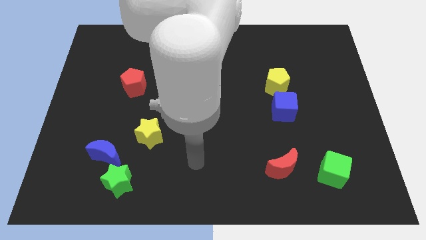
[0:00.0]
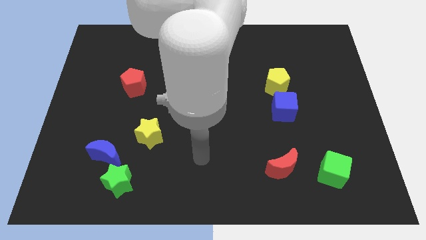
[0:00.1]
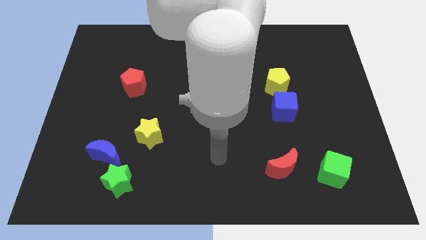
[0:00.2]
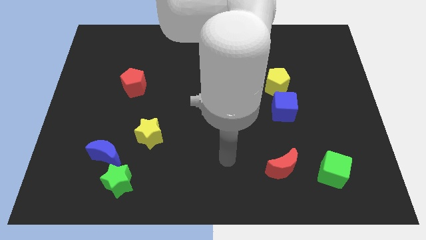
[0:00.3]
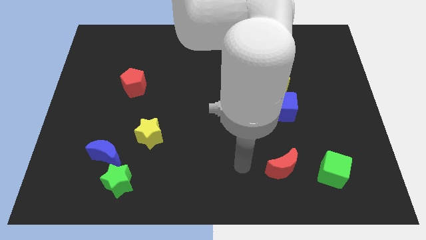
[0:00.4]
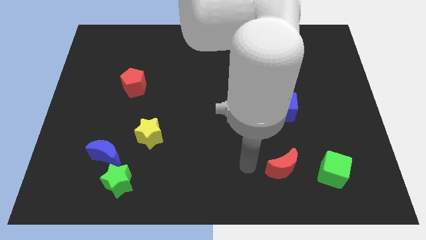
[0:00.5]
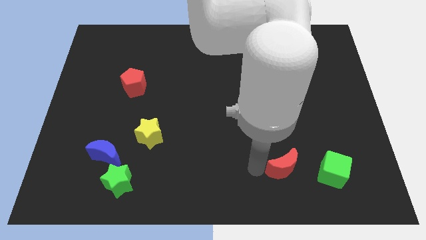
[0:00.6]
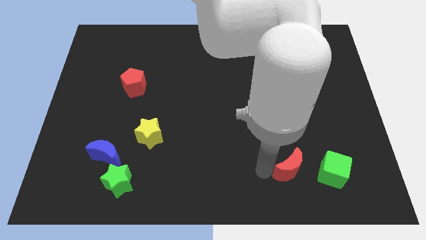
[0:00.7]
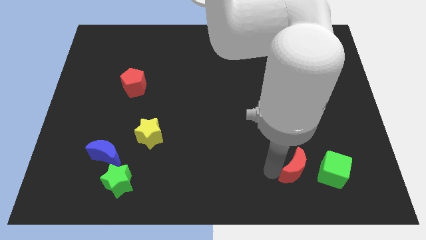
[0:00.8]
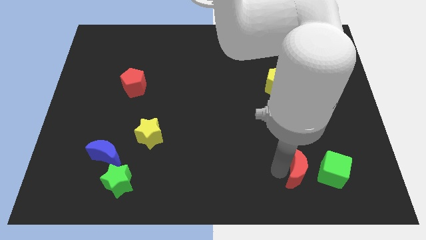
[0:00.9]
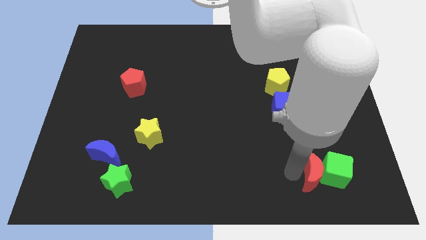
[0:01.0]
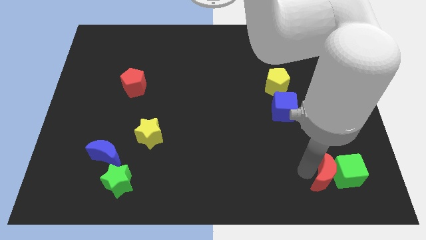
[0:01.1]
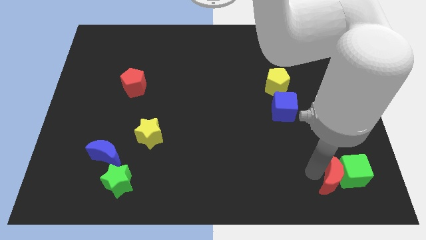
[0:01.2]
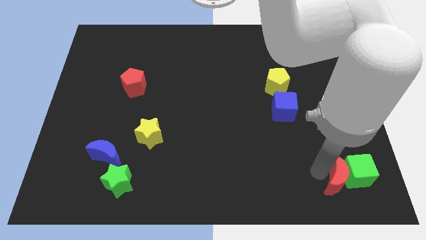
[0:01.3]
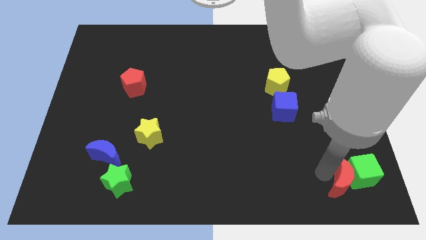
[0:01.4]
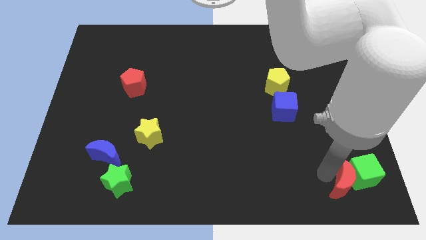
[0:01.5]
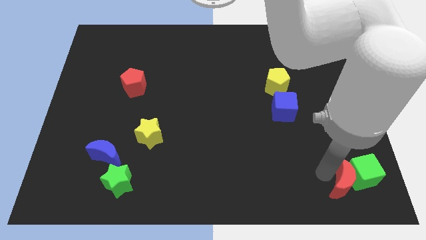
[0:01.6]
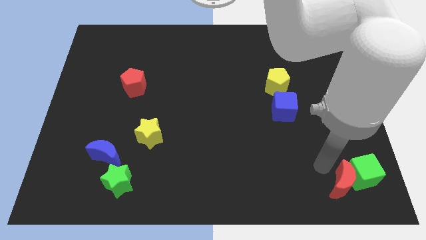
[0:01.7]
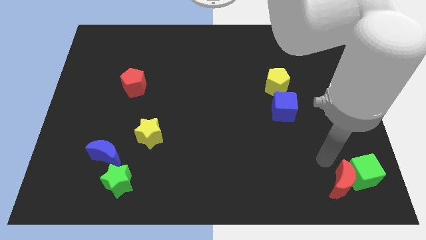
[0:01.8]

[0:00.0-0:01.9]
move the red moon into the green cube

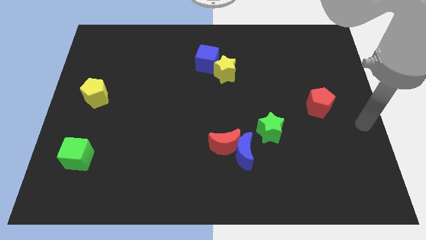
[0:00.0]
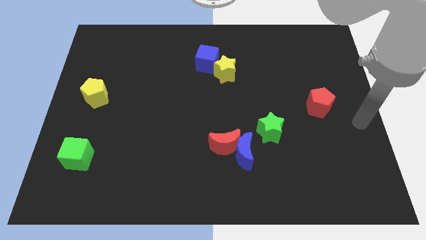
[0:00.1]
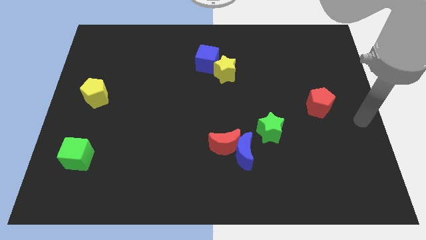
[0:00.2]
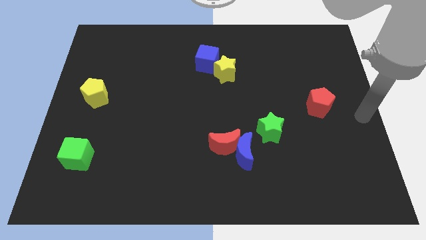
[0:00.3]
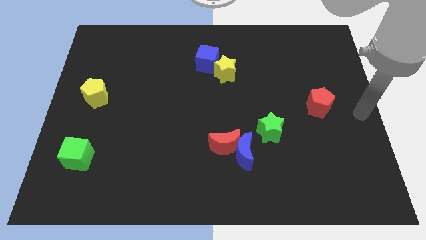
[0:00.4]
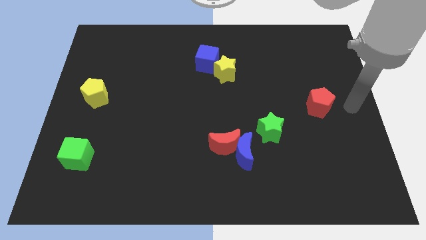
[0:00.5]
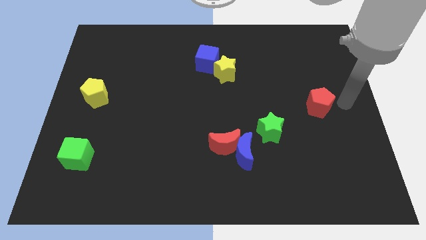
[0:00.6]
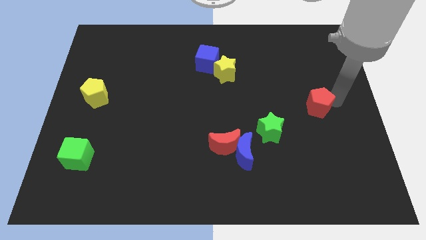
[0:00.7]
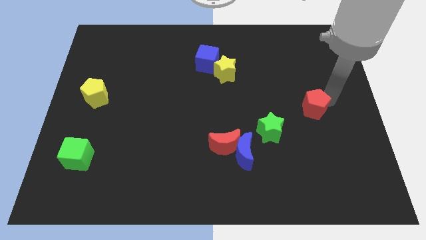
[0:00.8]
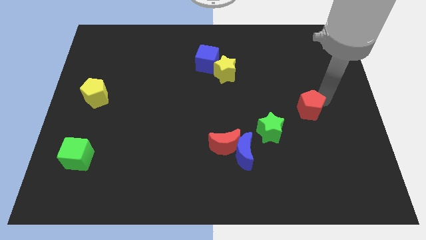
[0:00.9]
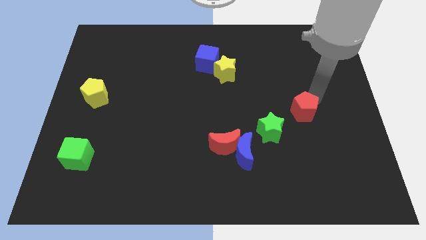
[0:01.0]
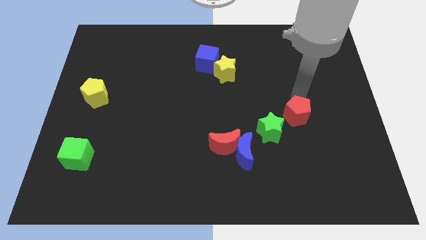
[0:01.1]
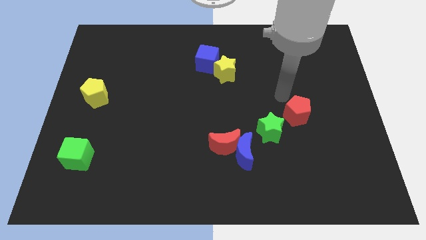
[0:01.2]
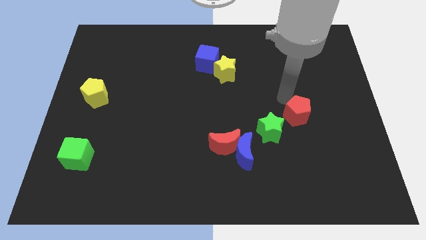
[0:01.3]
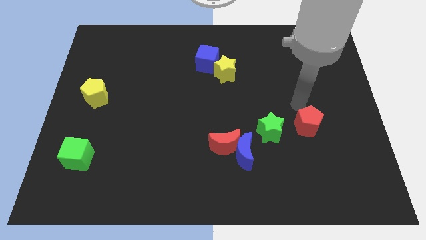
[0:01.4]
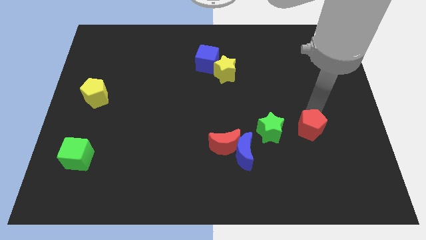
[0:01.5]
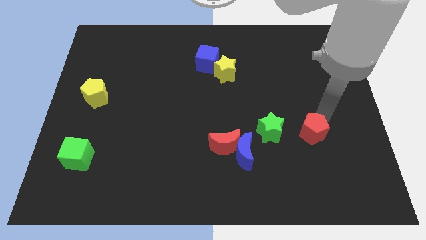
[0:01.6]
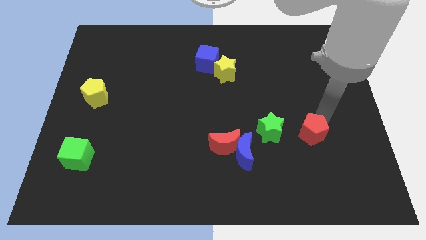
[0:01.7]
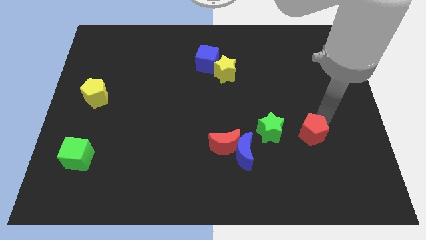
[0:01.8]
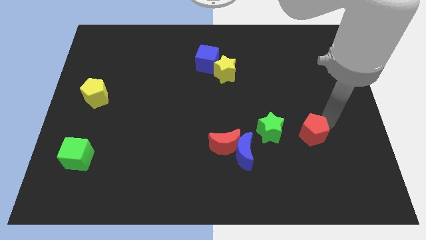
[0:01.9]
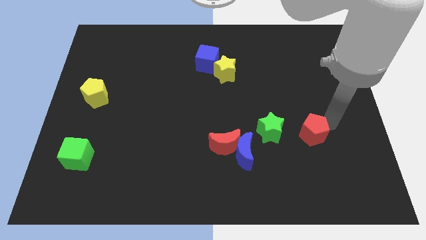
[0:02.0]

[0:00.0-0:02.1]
move red pentagon to the right of green star

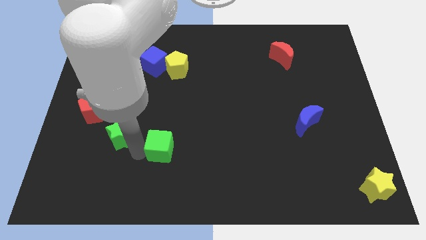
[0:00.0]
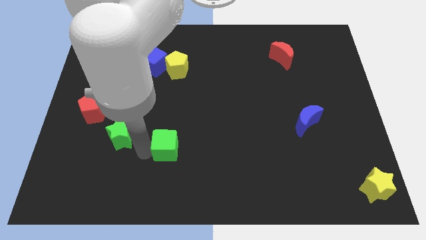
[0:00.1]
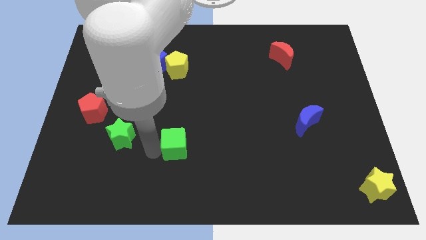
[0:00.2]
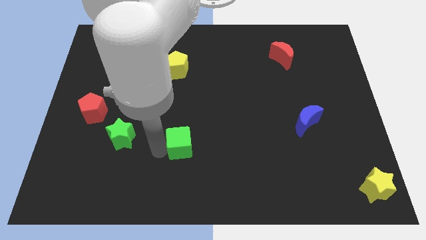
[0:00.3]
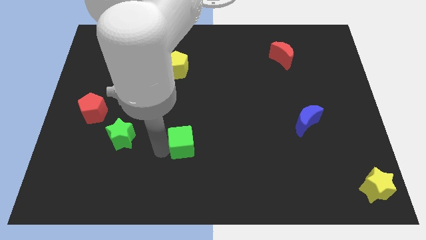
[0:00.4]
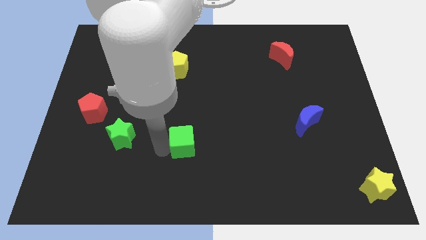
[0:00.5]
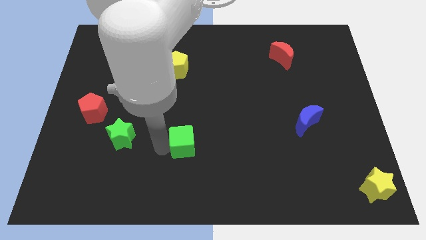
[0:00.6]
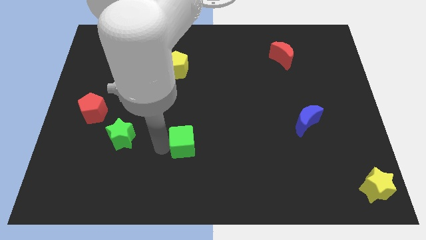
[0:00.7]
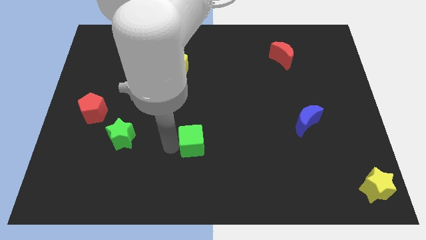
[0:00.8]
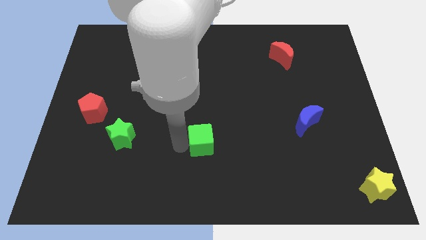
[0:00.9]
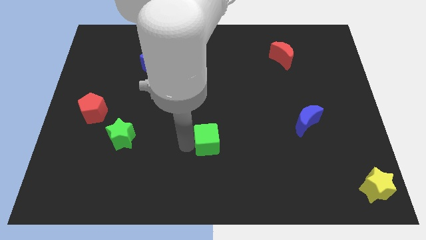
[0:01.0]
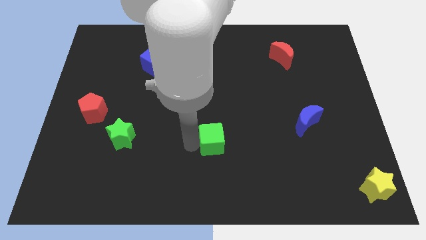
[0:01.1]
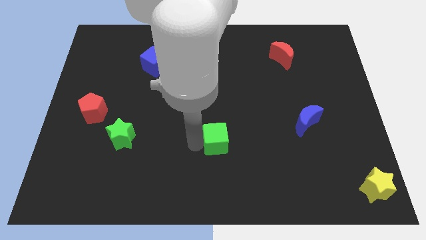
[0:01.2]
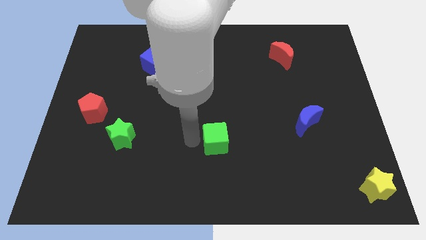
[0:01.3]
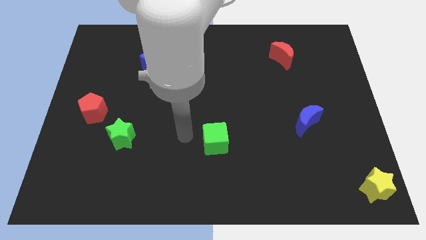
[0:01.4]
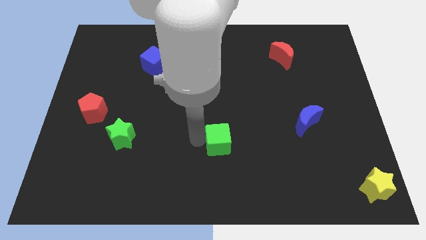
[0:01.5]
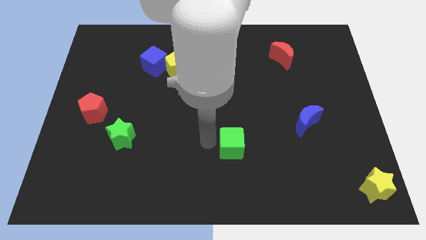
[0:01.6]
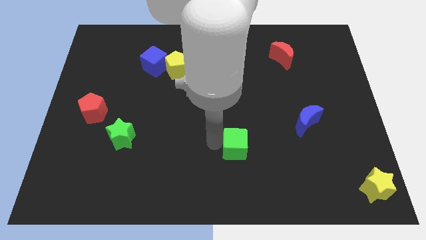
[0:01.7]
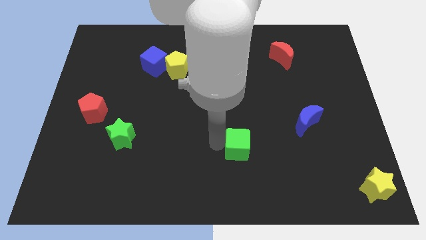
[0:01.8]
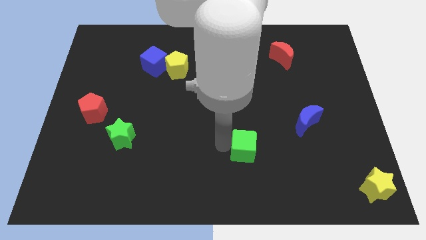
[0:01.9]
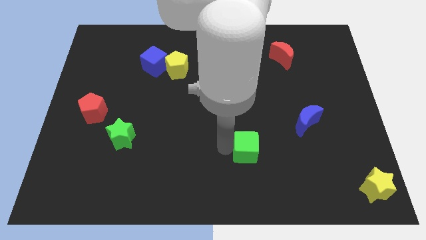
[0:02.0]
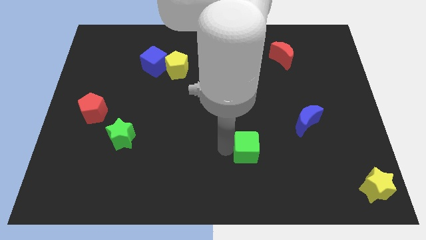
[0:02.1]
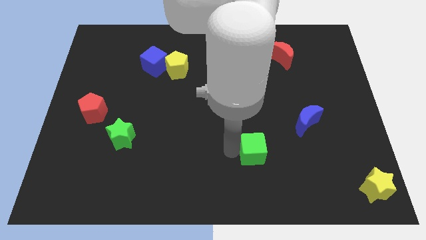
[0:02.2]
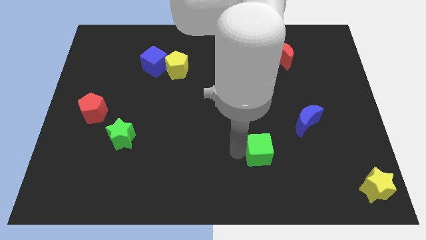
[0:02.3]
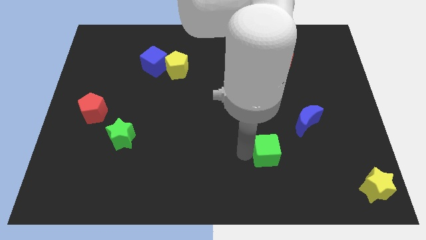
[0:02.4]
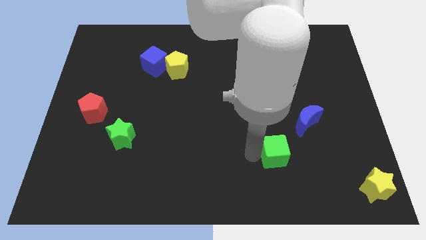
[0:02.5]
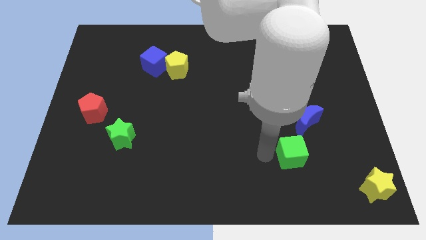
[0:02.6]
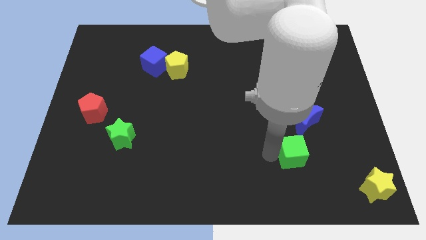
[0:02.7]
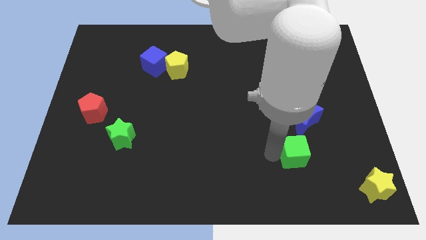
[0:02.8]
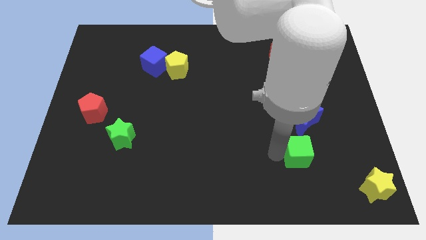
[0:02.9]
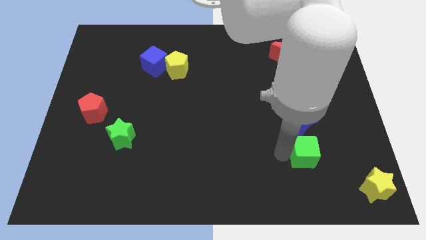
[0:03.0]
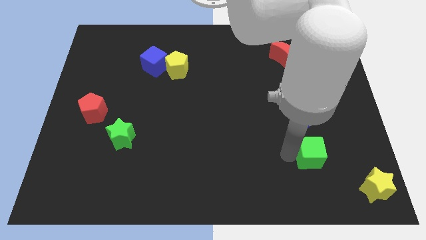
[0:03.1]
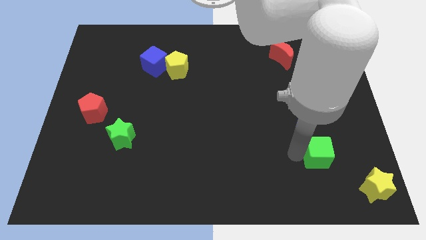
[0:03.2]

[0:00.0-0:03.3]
push the green cube to the right

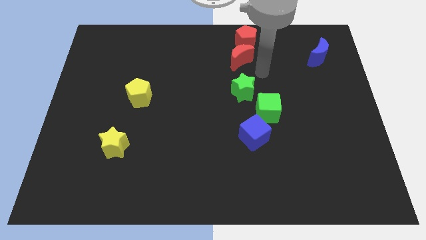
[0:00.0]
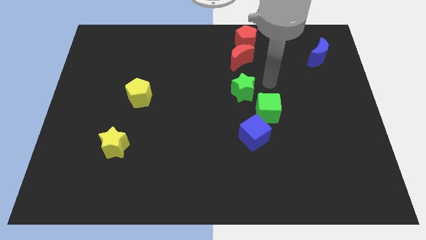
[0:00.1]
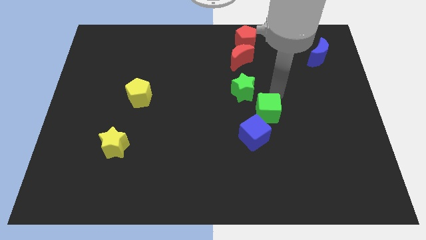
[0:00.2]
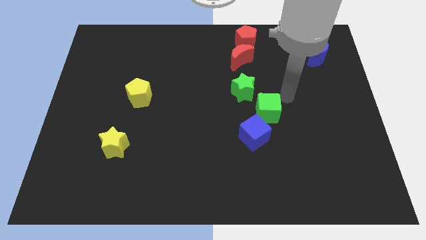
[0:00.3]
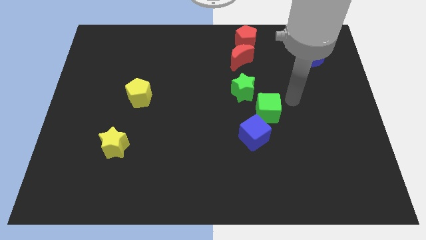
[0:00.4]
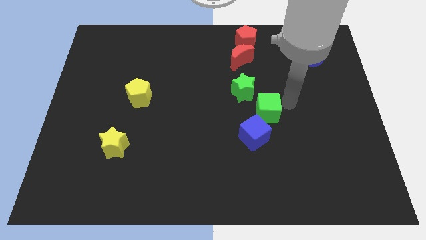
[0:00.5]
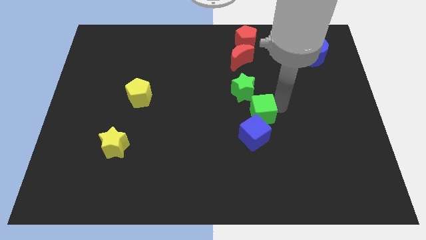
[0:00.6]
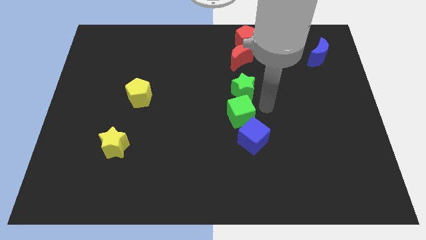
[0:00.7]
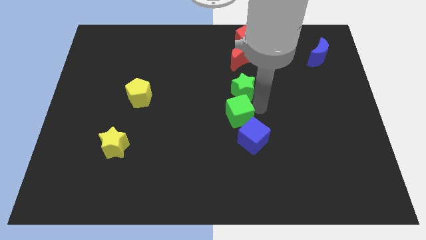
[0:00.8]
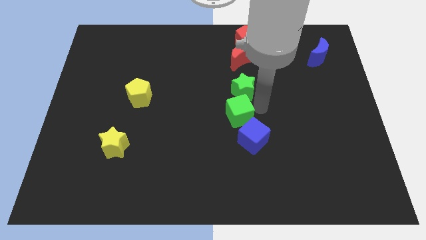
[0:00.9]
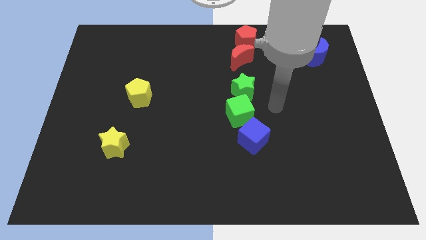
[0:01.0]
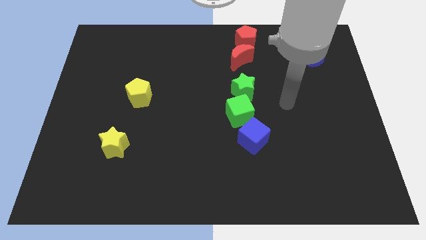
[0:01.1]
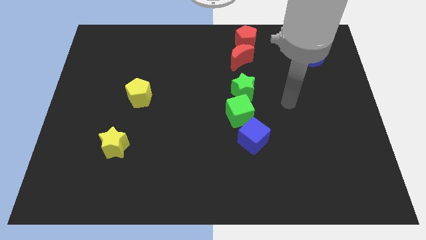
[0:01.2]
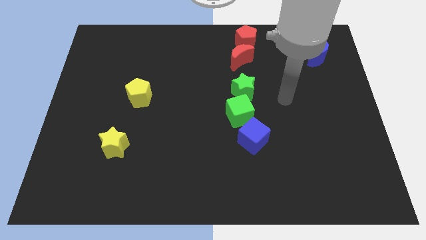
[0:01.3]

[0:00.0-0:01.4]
push the green cube between green star and blue block

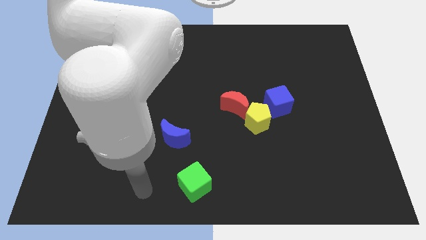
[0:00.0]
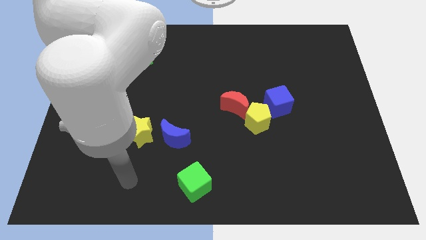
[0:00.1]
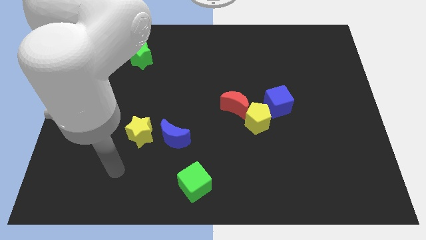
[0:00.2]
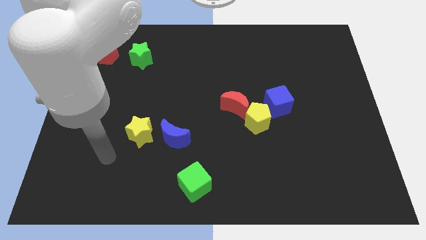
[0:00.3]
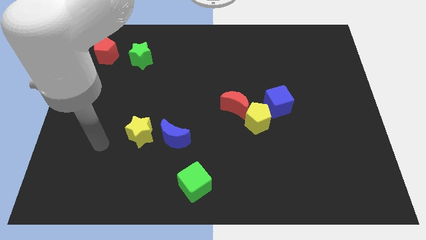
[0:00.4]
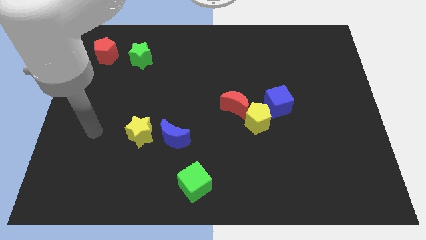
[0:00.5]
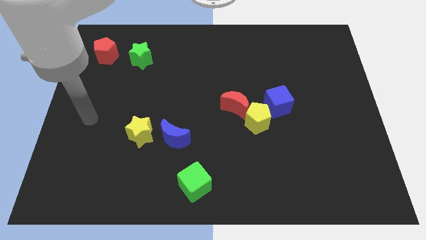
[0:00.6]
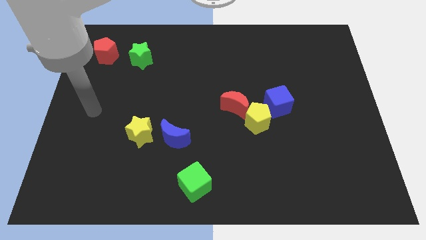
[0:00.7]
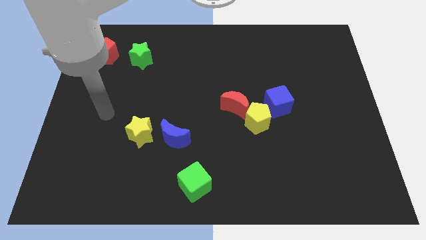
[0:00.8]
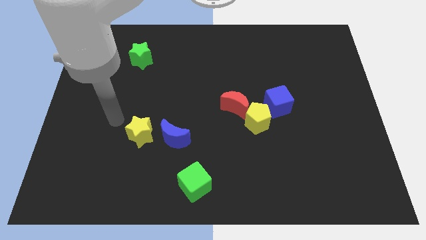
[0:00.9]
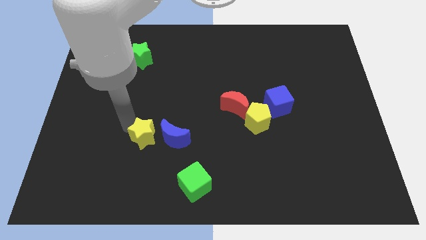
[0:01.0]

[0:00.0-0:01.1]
place arm above yellow star
